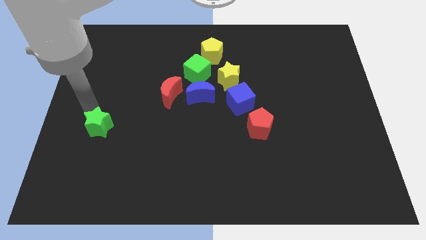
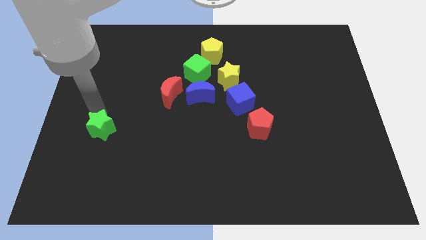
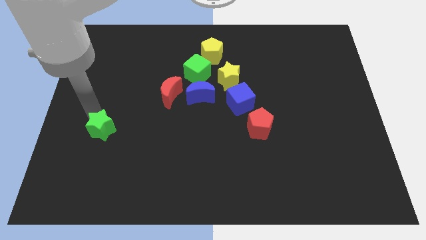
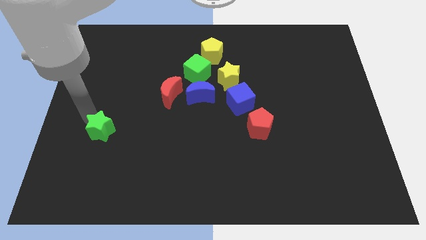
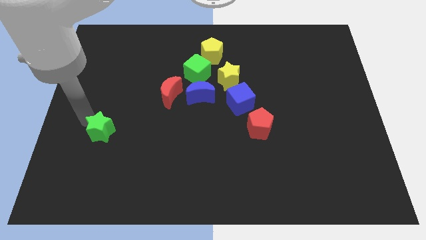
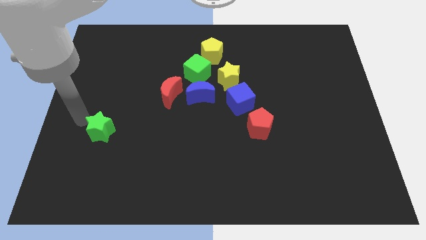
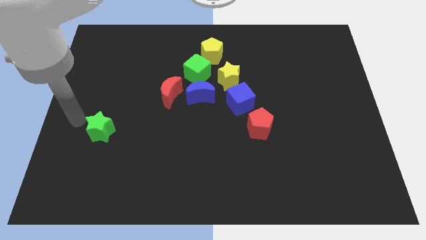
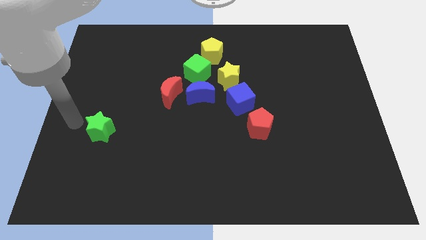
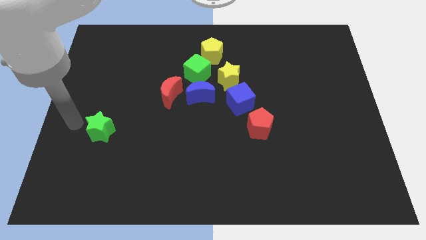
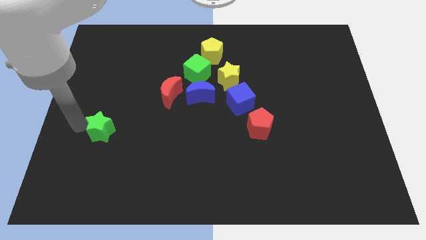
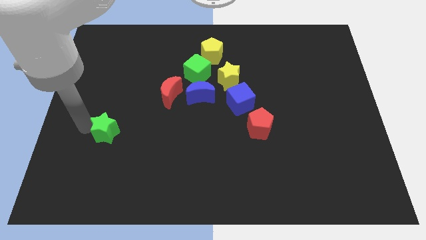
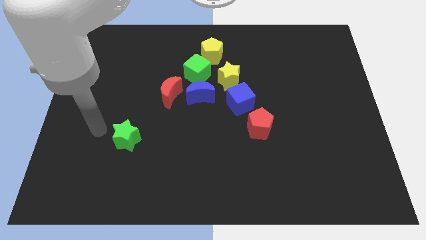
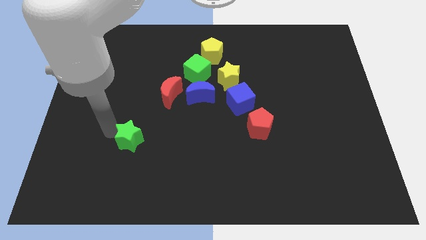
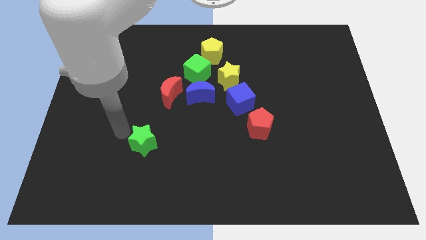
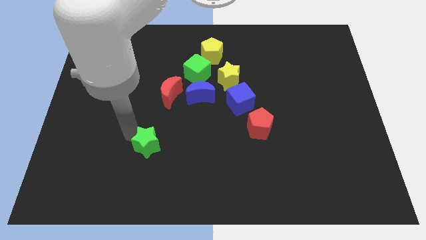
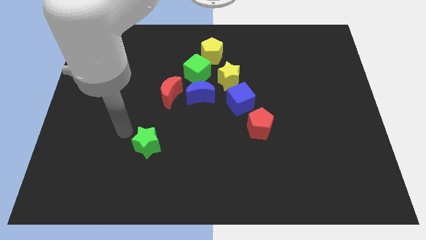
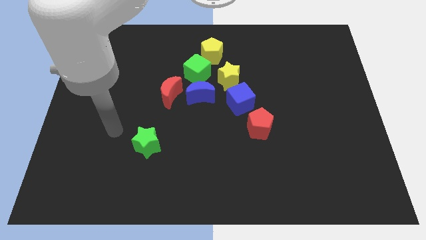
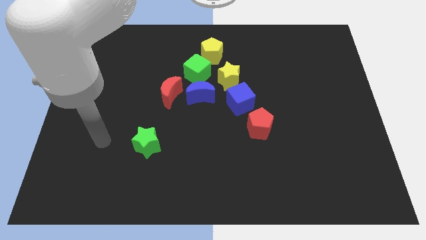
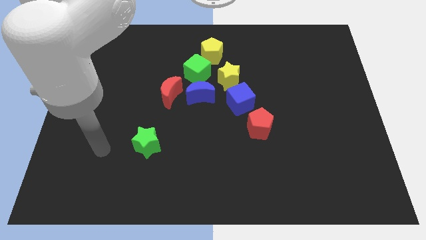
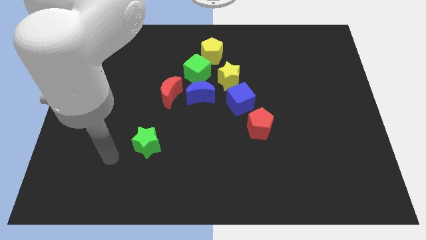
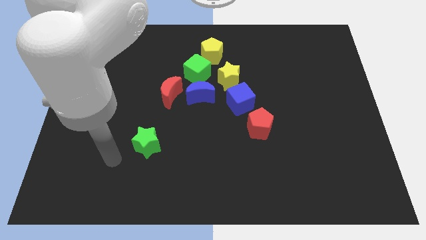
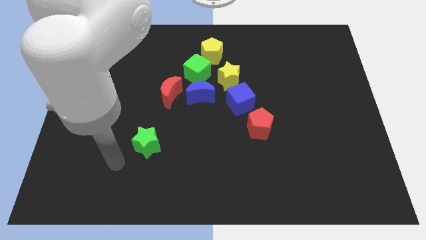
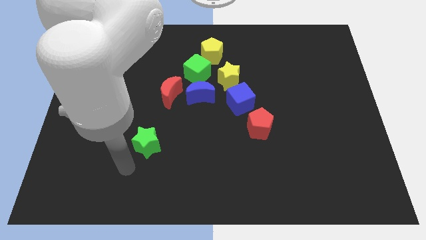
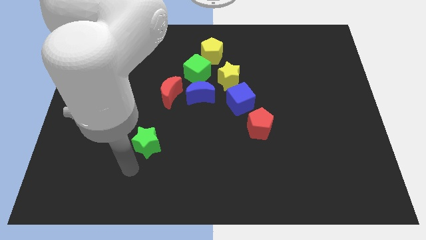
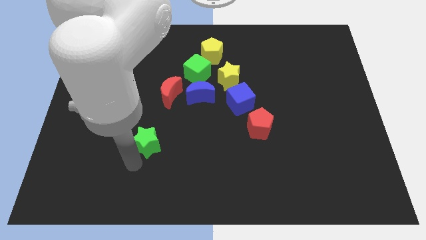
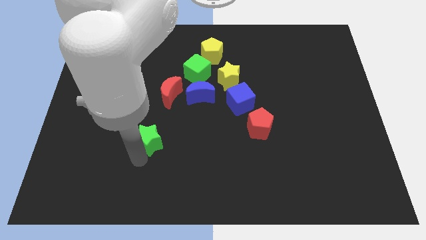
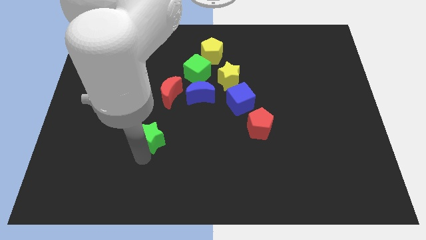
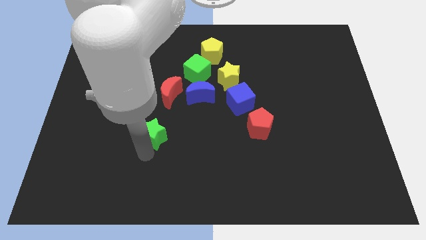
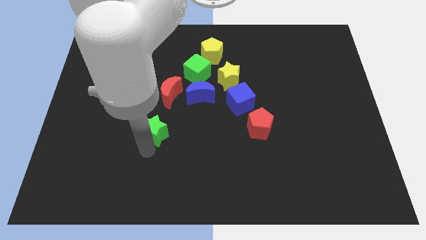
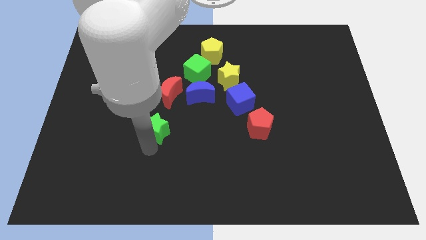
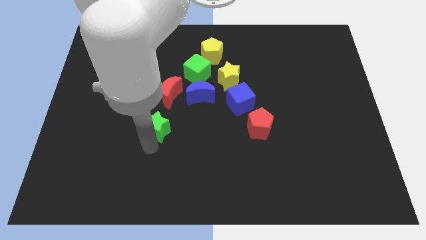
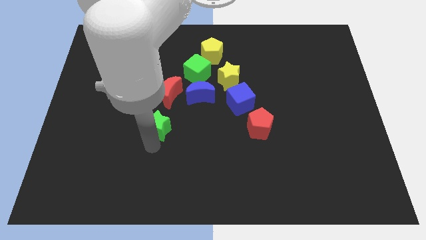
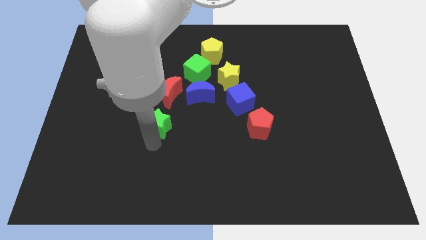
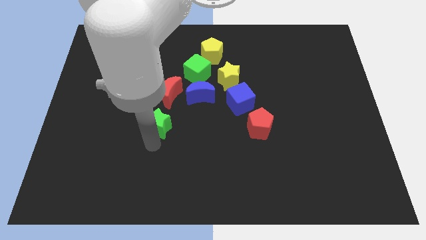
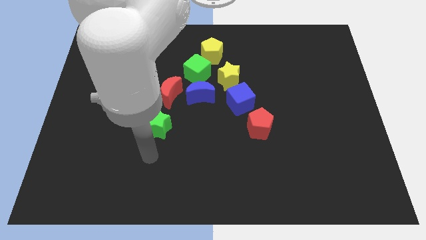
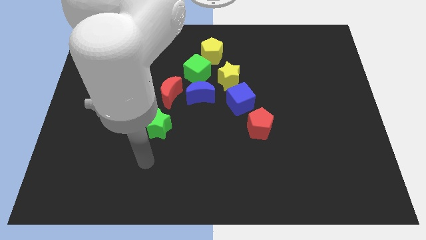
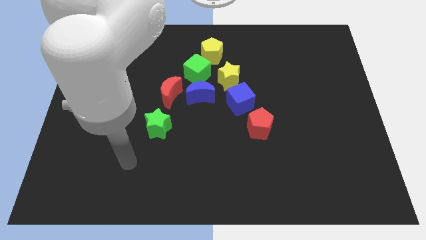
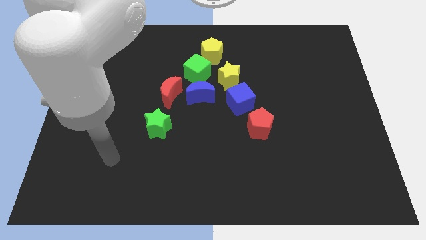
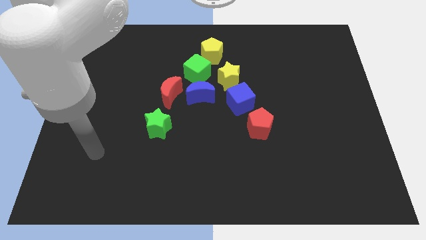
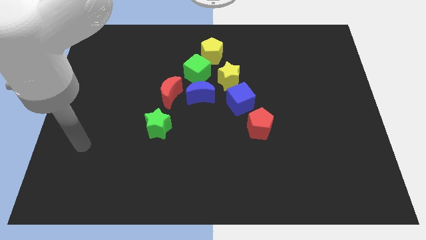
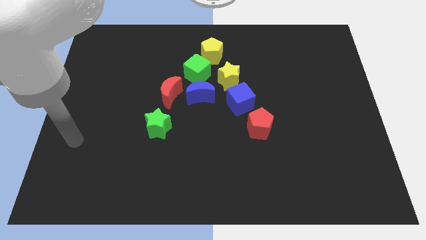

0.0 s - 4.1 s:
place green star at the bottom of the red moon

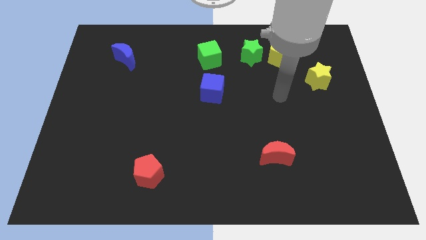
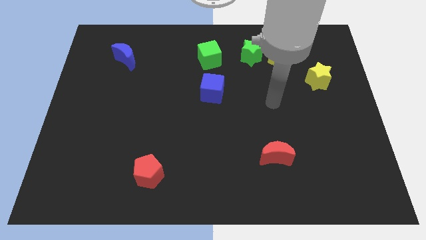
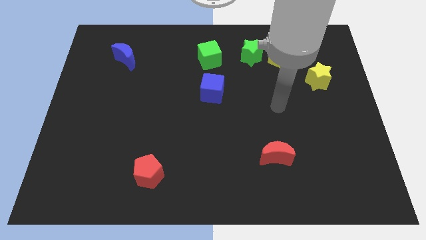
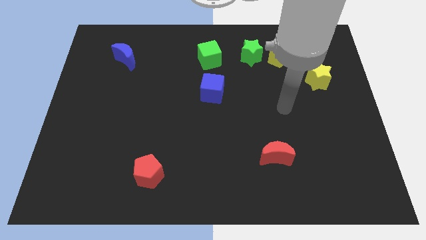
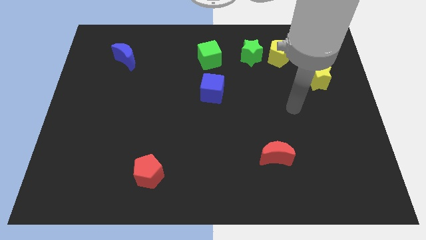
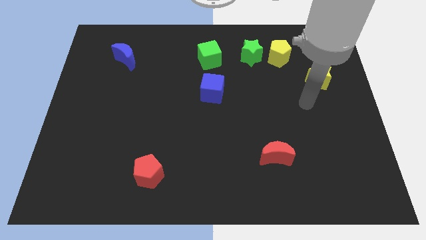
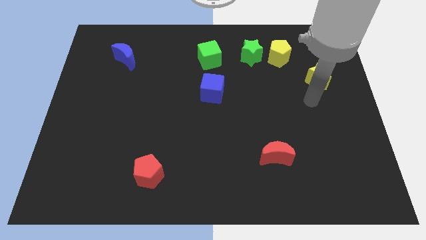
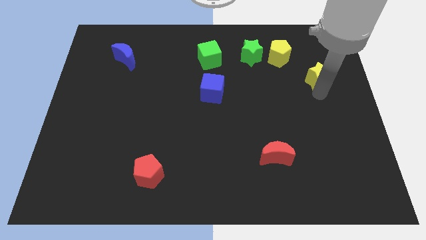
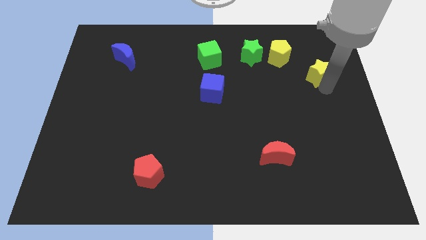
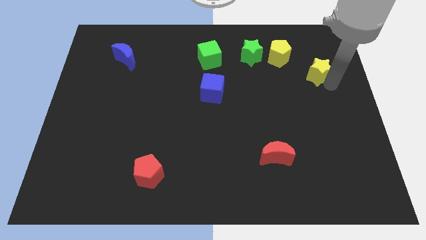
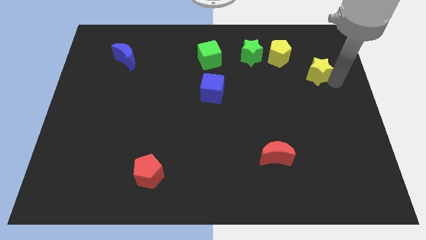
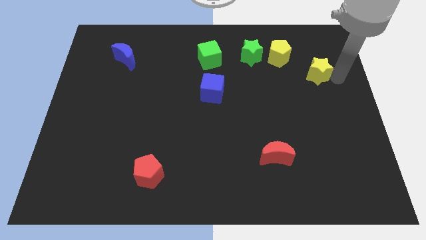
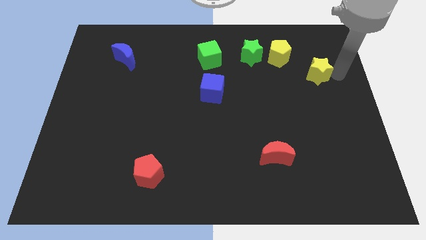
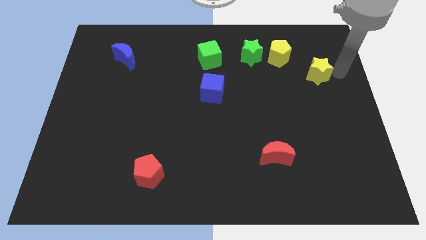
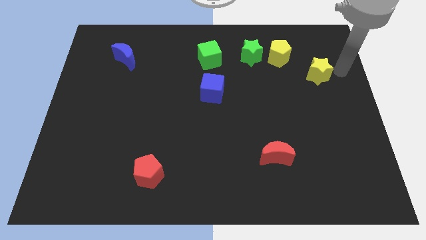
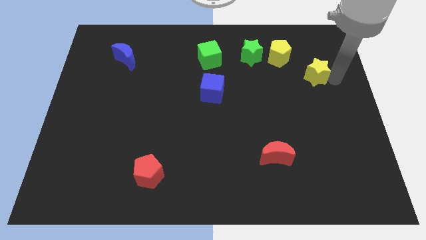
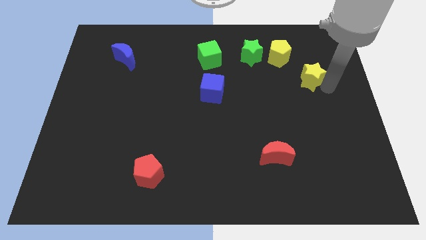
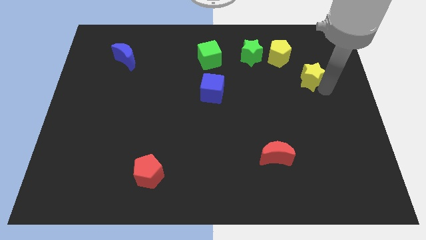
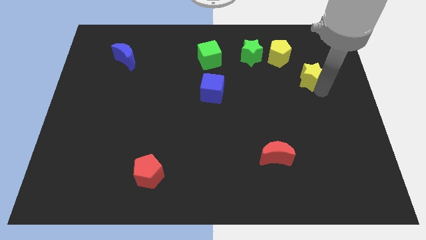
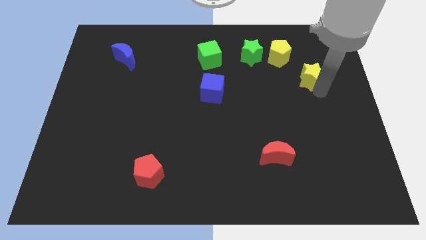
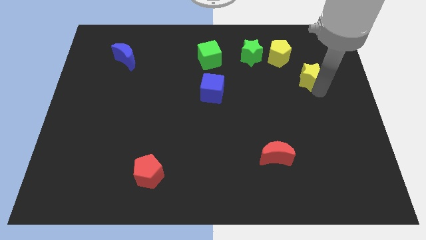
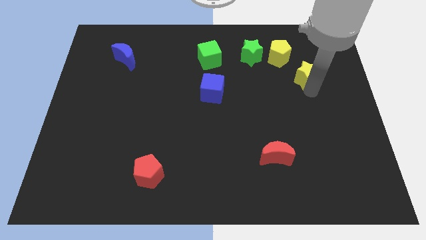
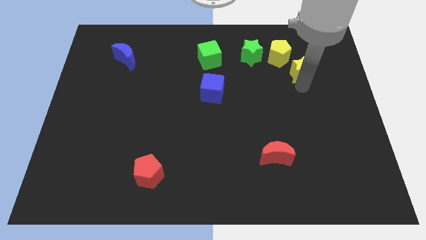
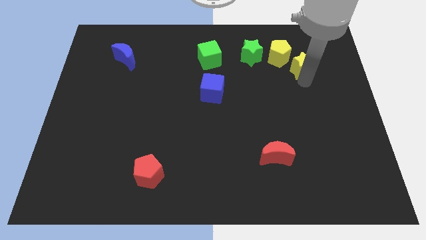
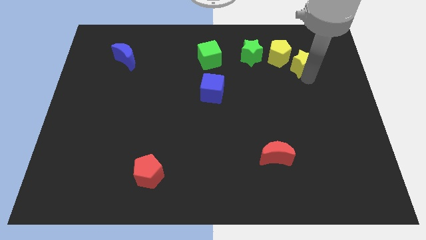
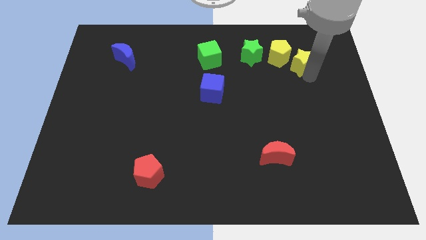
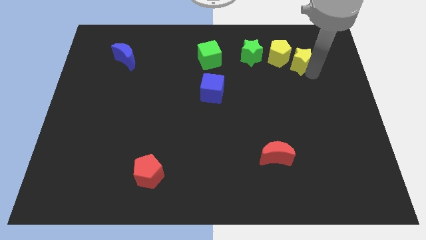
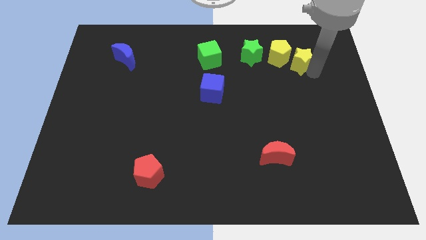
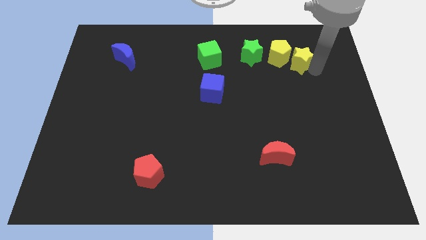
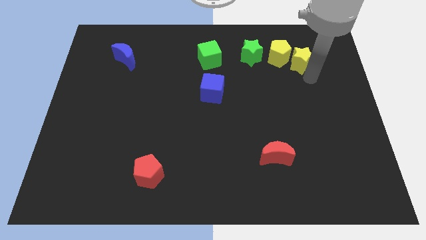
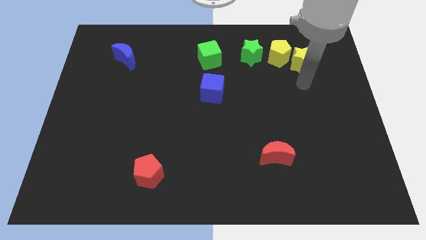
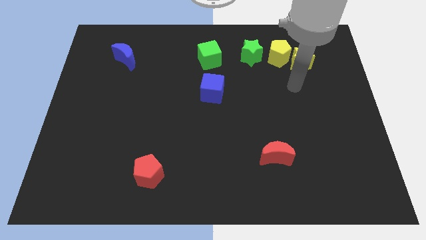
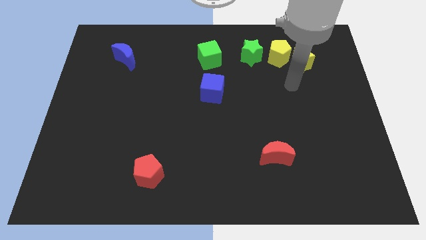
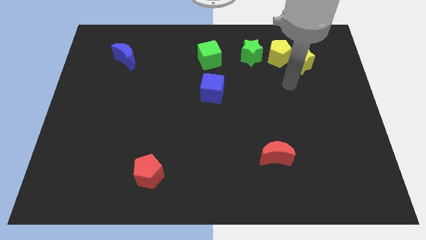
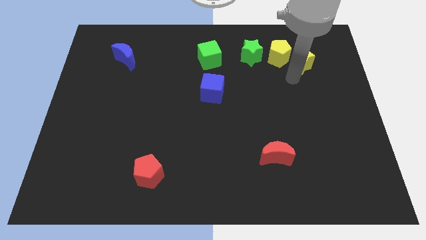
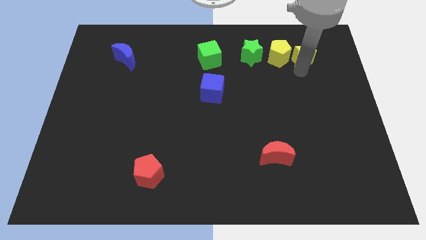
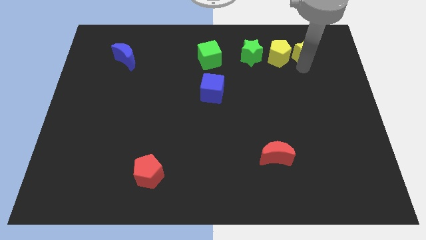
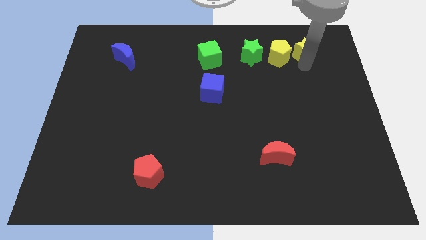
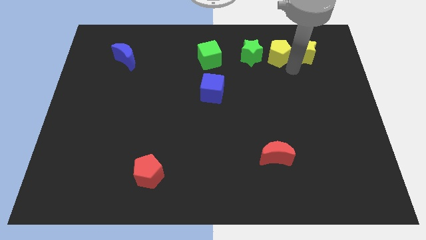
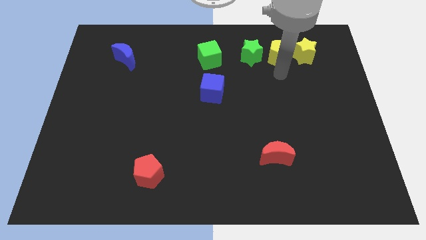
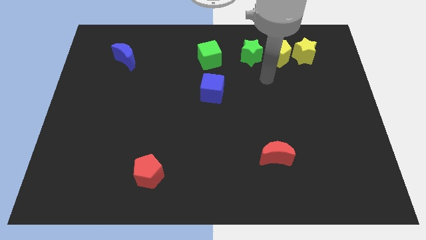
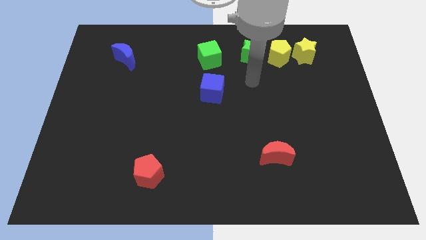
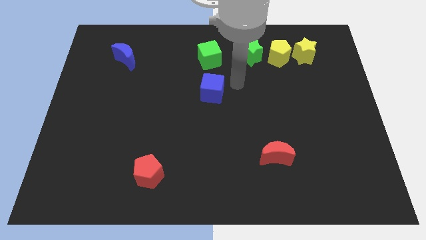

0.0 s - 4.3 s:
push the yellow star into yellow pentagon

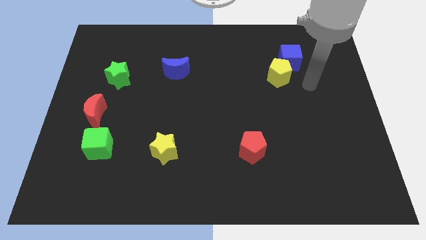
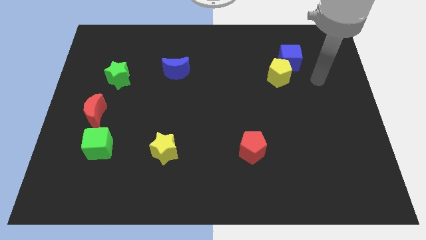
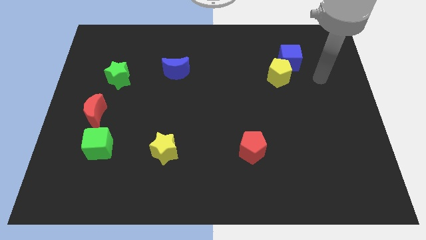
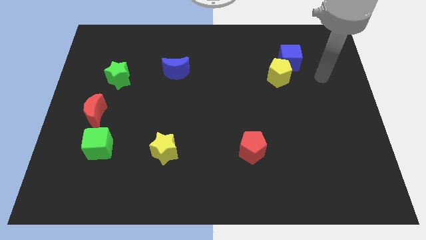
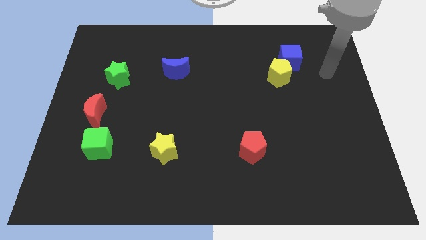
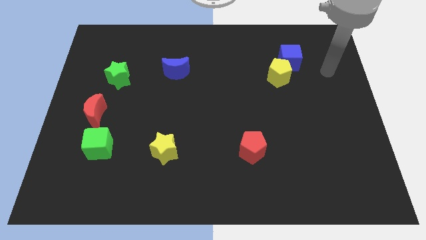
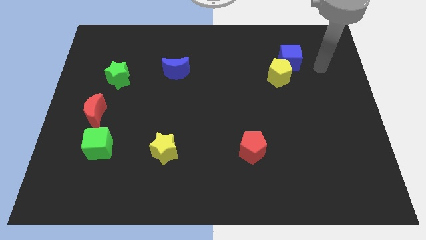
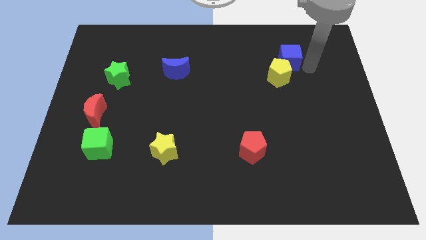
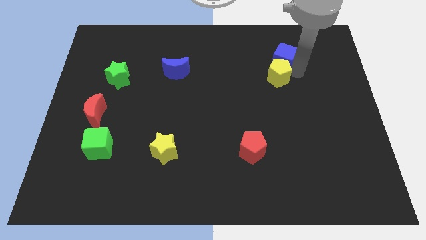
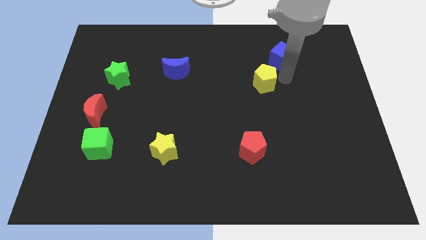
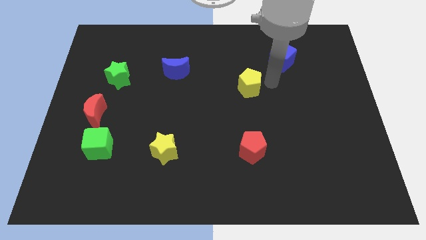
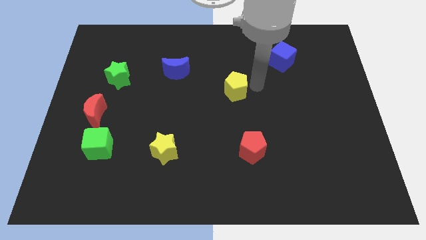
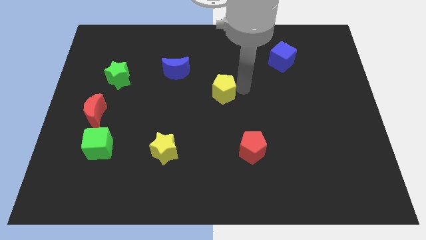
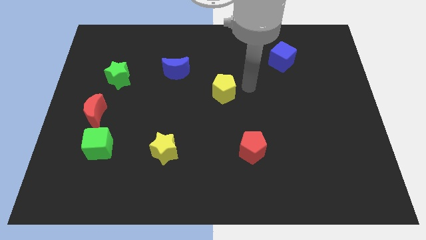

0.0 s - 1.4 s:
push the yellow pentagon away from the blue cube
